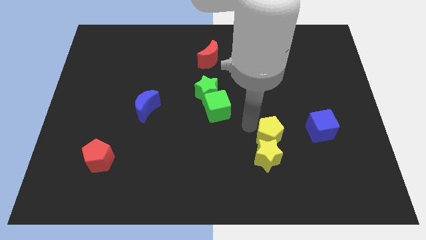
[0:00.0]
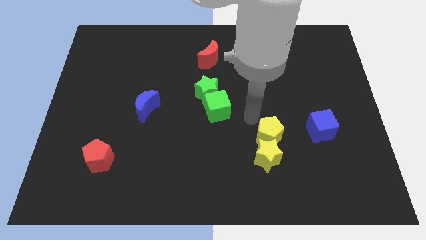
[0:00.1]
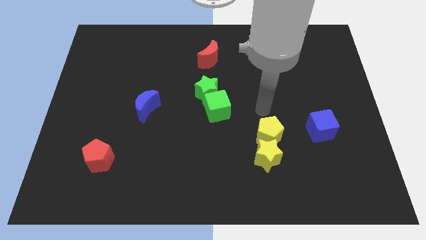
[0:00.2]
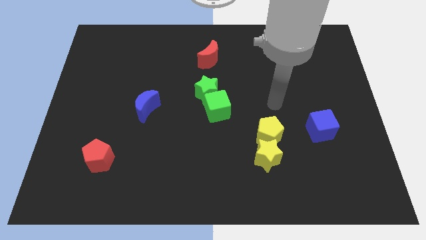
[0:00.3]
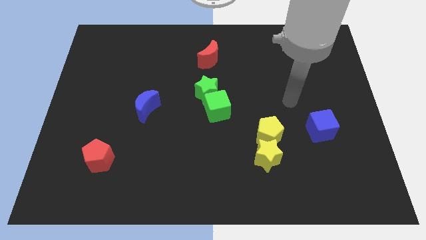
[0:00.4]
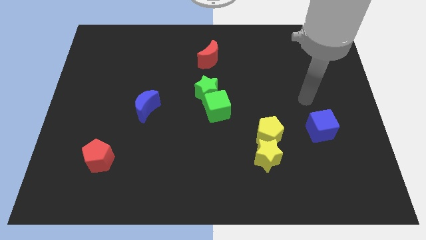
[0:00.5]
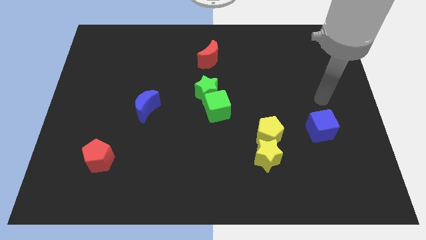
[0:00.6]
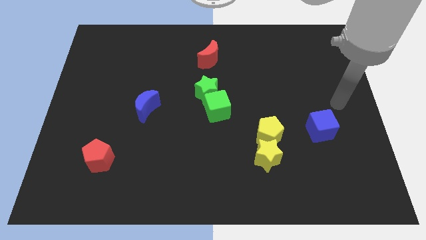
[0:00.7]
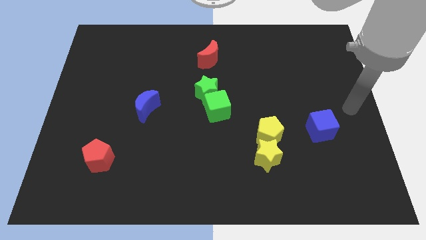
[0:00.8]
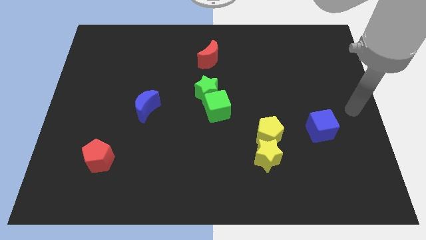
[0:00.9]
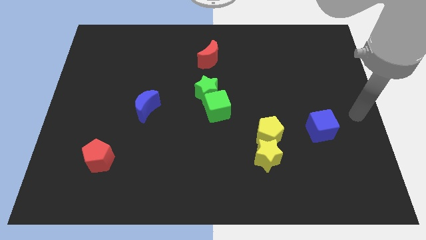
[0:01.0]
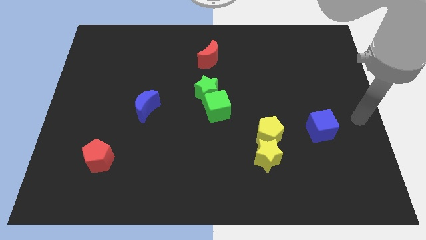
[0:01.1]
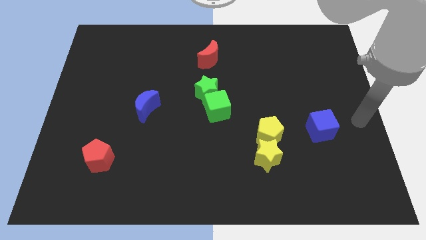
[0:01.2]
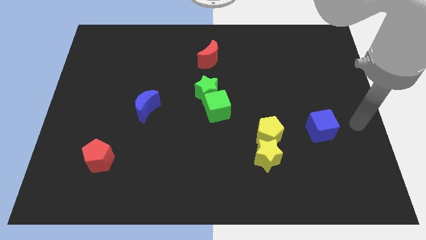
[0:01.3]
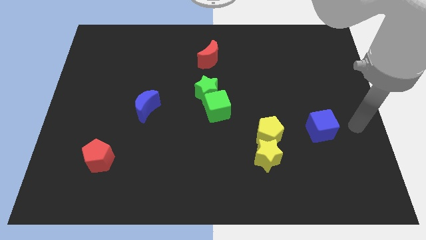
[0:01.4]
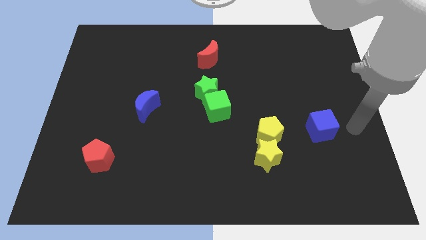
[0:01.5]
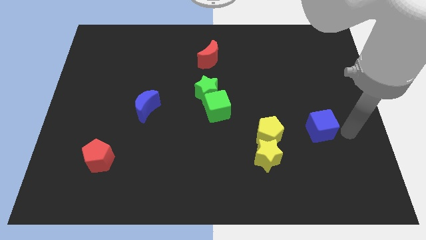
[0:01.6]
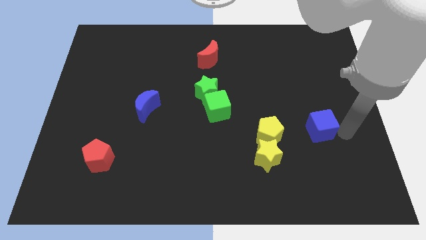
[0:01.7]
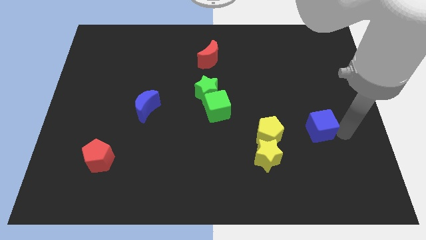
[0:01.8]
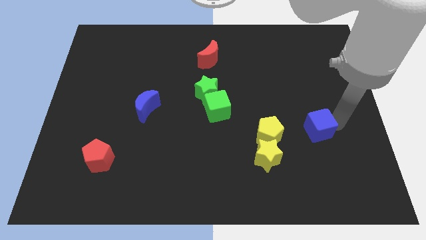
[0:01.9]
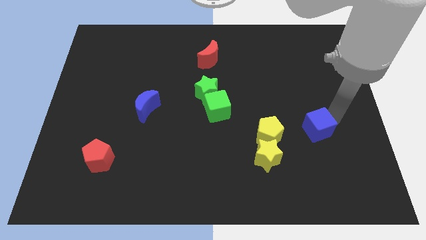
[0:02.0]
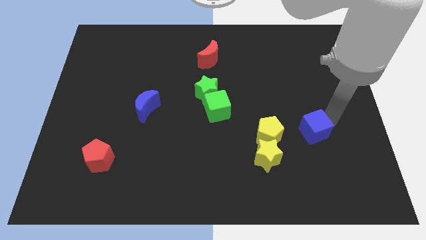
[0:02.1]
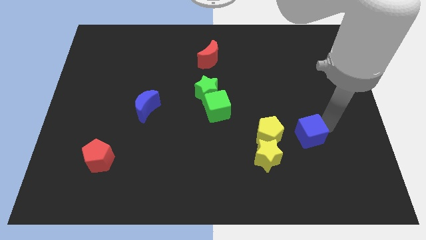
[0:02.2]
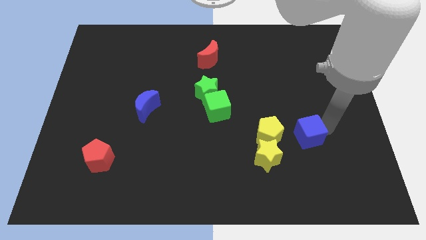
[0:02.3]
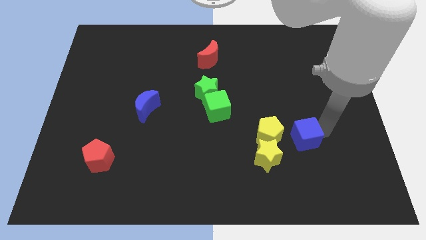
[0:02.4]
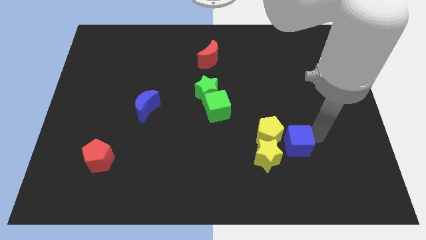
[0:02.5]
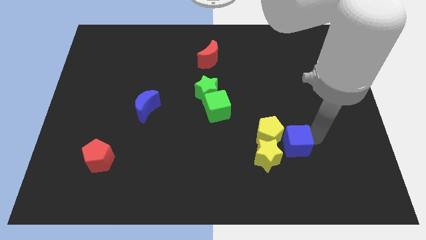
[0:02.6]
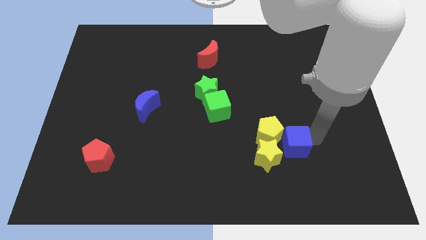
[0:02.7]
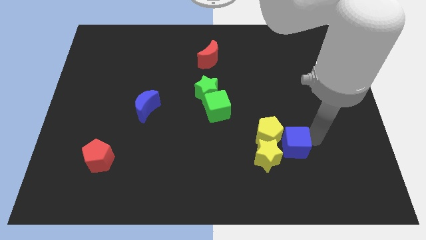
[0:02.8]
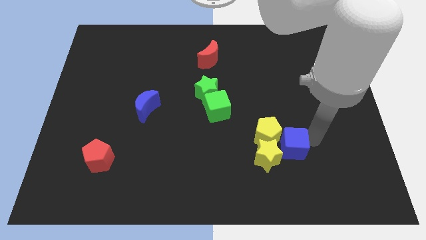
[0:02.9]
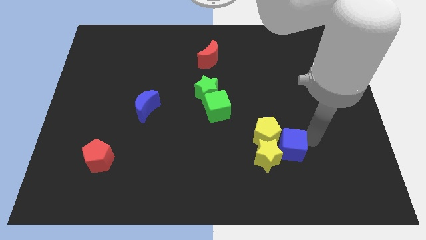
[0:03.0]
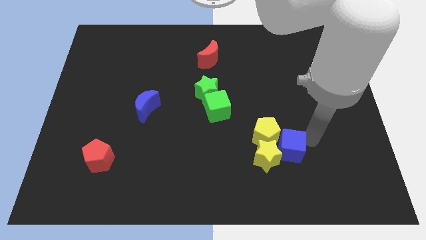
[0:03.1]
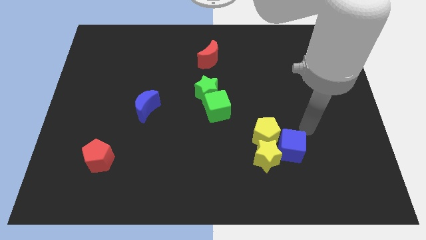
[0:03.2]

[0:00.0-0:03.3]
push the blue cube into the right side of the yellow blocks

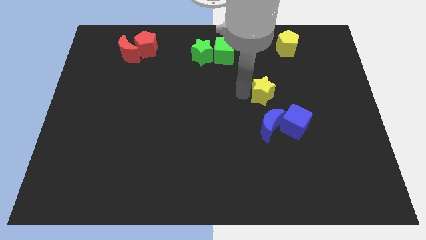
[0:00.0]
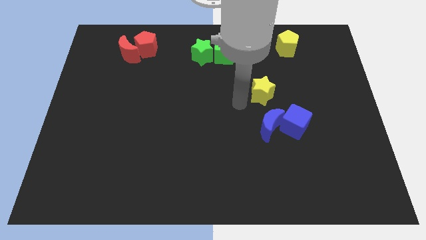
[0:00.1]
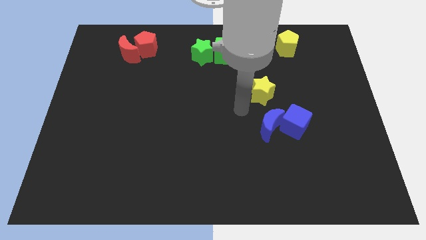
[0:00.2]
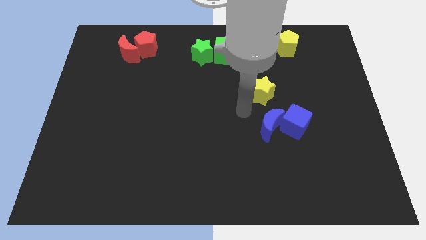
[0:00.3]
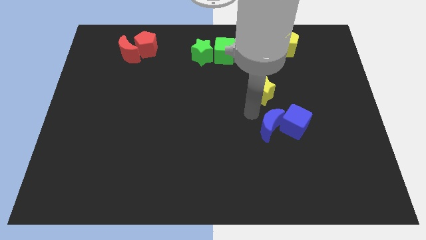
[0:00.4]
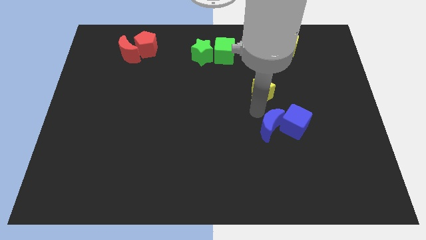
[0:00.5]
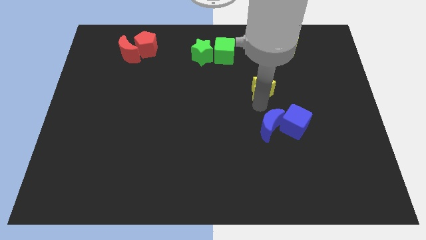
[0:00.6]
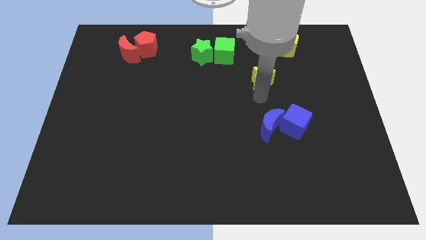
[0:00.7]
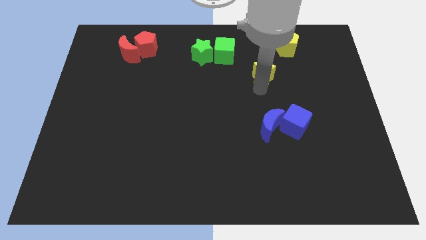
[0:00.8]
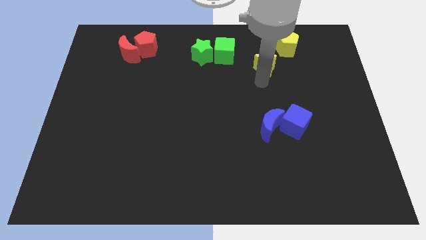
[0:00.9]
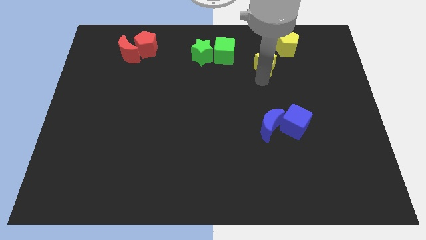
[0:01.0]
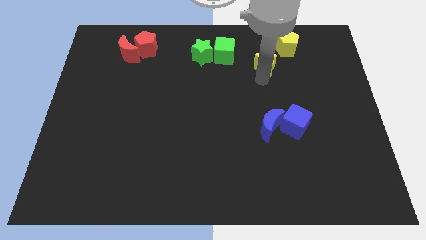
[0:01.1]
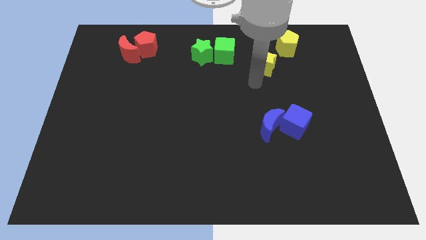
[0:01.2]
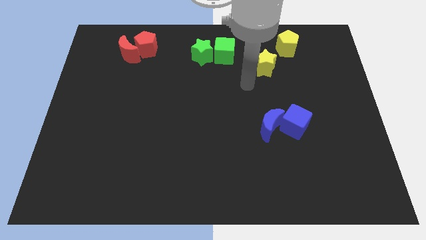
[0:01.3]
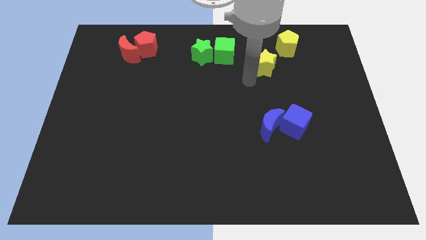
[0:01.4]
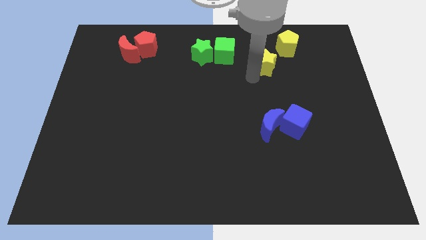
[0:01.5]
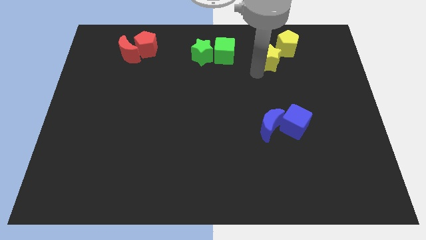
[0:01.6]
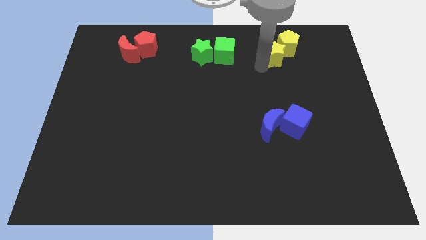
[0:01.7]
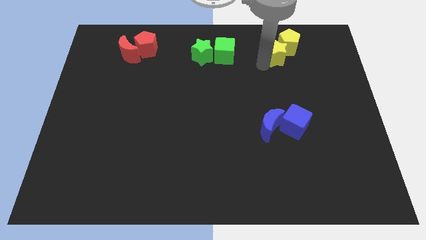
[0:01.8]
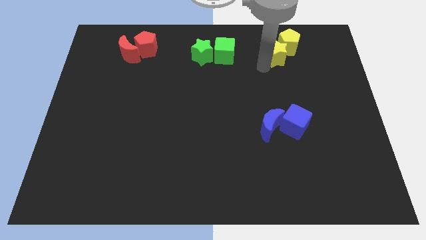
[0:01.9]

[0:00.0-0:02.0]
move the yellow star towards the bottom of the yellow pentagon

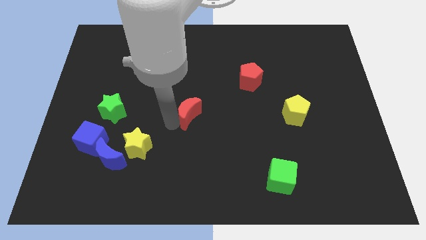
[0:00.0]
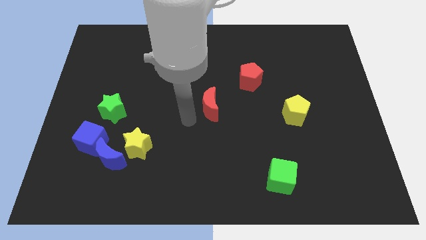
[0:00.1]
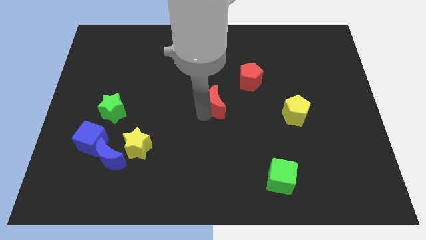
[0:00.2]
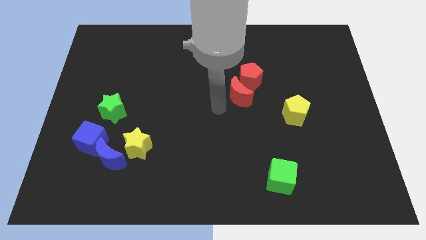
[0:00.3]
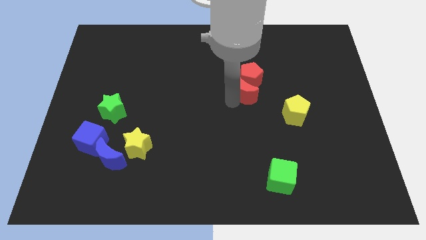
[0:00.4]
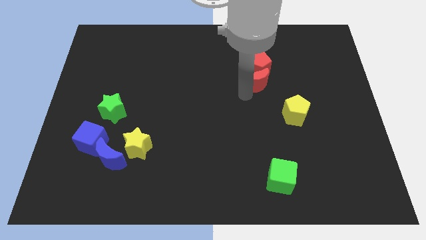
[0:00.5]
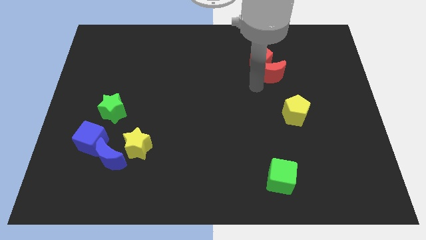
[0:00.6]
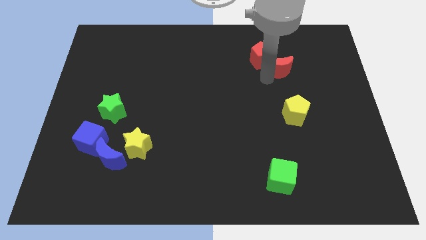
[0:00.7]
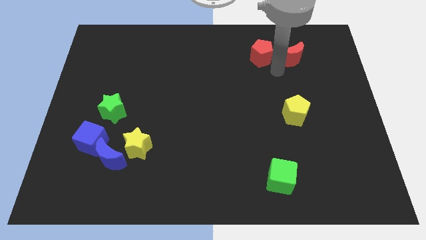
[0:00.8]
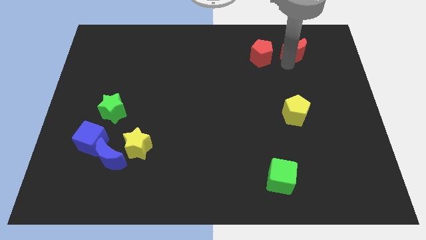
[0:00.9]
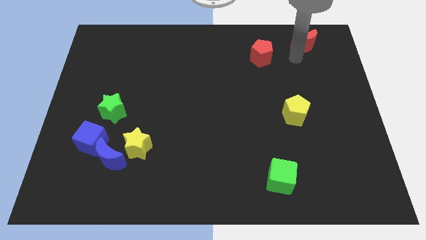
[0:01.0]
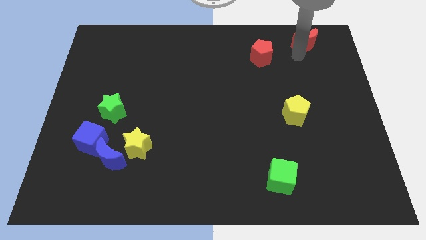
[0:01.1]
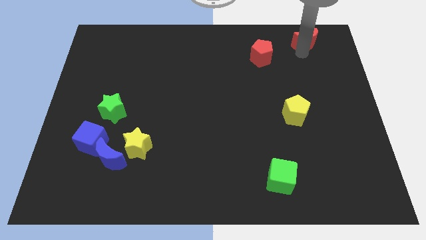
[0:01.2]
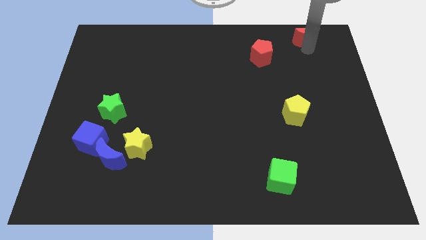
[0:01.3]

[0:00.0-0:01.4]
push the red moon towards the top corner side

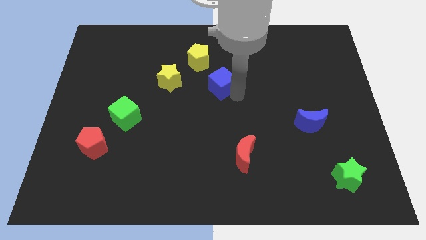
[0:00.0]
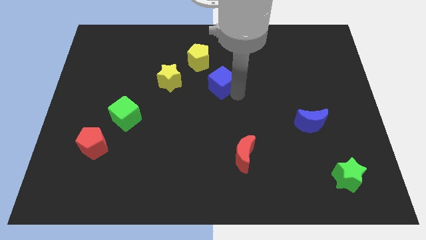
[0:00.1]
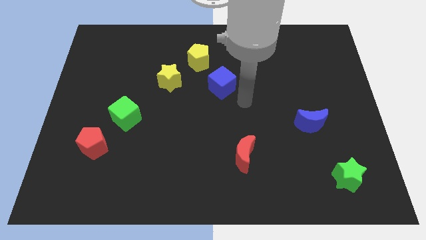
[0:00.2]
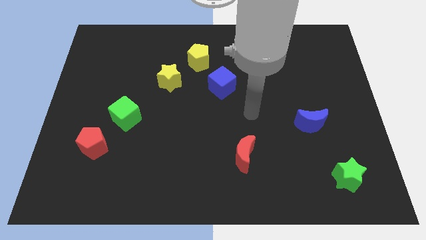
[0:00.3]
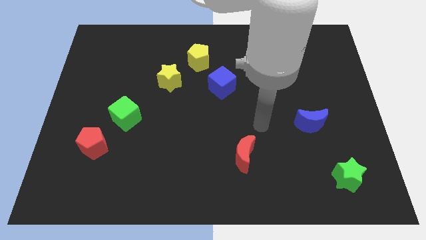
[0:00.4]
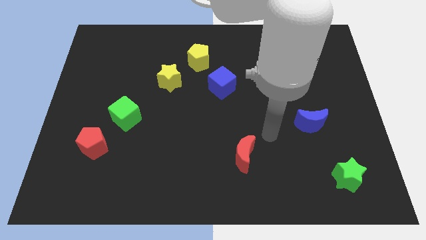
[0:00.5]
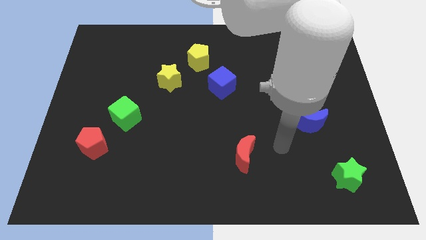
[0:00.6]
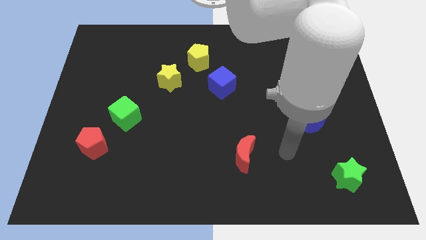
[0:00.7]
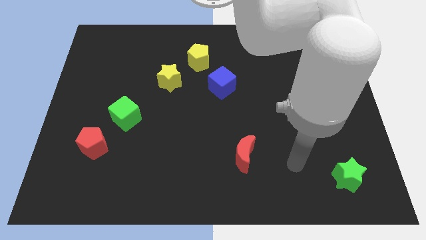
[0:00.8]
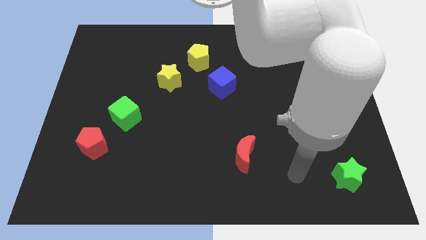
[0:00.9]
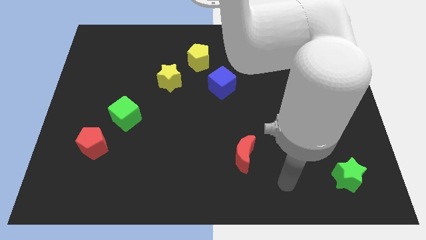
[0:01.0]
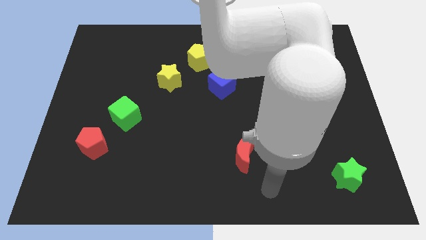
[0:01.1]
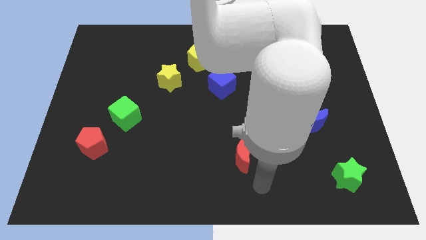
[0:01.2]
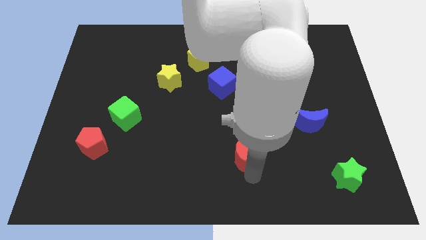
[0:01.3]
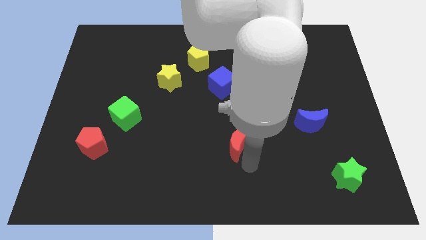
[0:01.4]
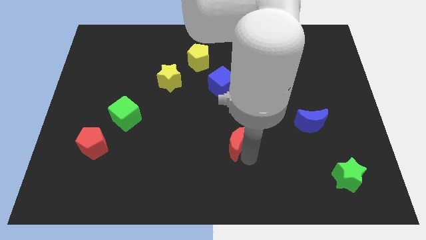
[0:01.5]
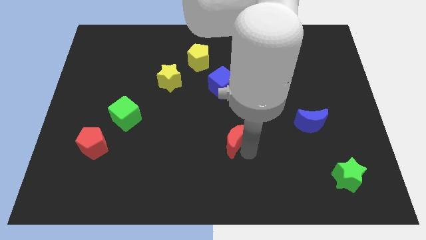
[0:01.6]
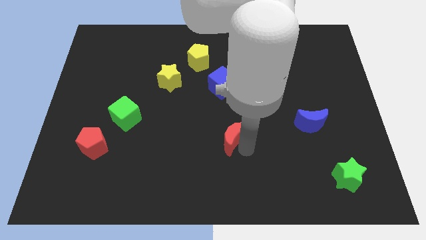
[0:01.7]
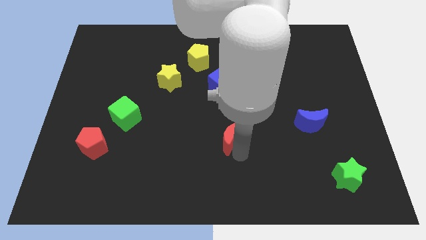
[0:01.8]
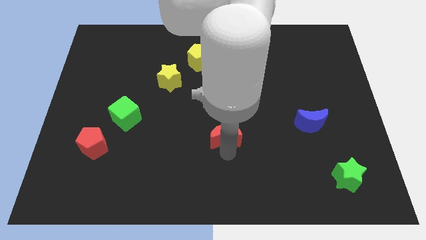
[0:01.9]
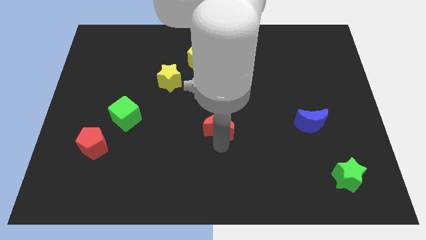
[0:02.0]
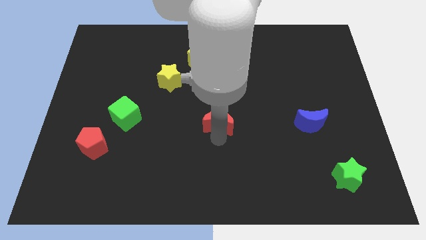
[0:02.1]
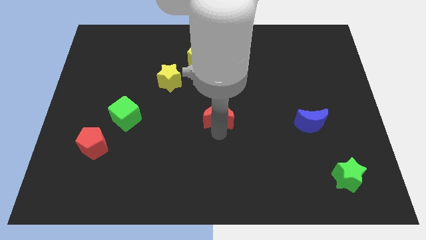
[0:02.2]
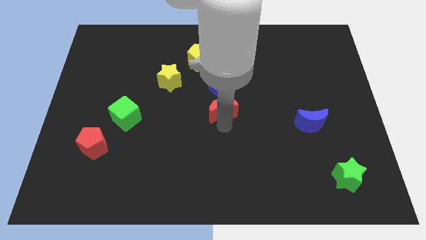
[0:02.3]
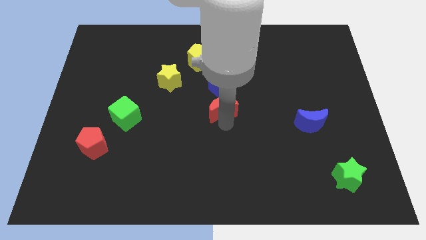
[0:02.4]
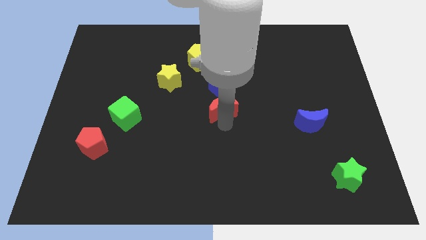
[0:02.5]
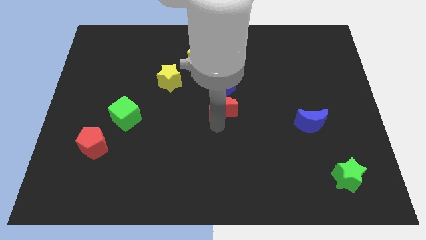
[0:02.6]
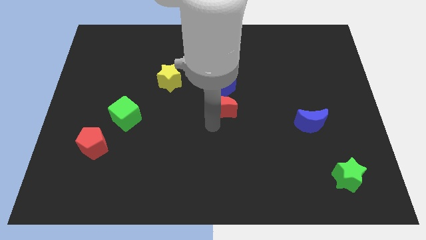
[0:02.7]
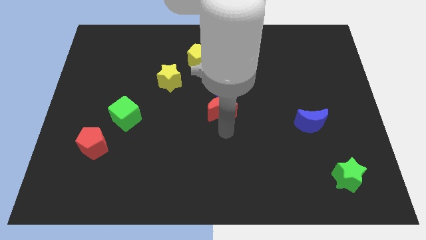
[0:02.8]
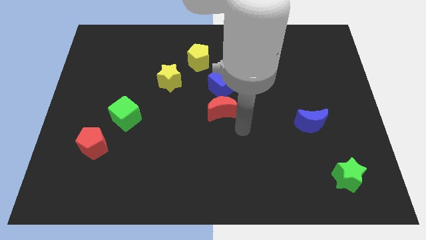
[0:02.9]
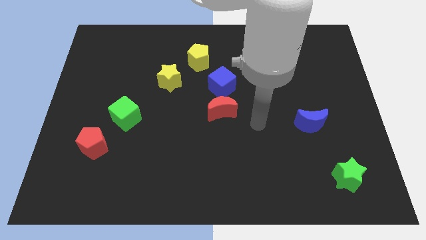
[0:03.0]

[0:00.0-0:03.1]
push the red moon bottom of the blue cube
